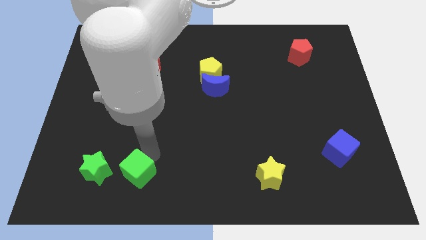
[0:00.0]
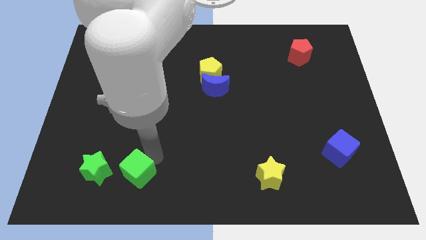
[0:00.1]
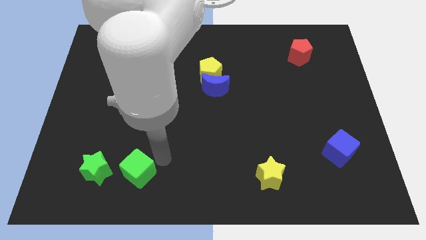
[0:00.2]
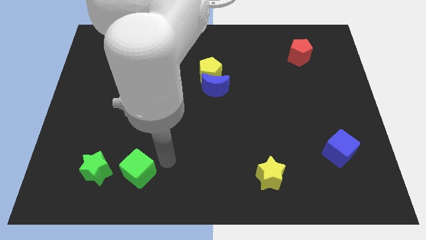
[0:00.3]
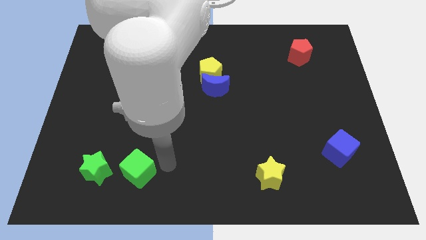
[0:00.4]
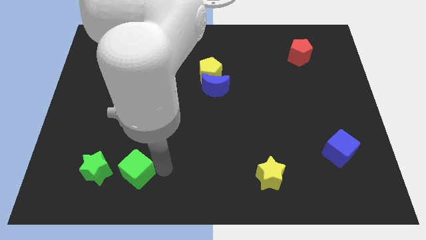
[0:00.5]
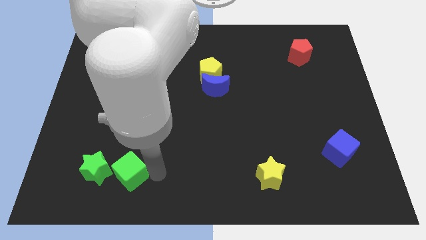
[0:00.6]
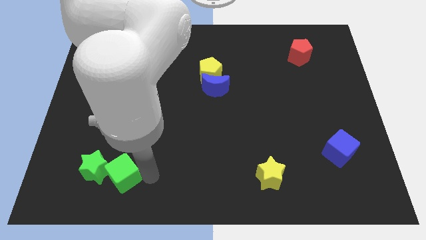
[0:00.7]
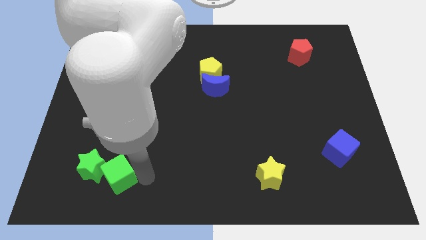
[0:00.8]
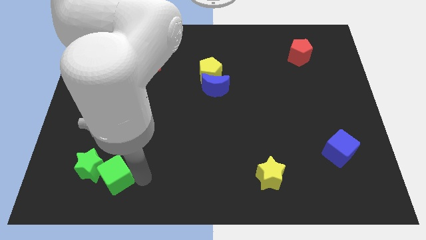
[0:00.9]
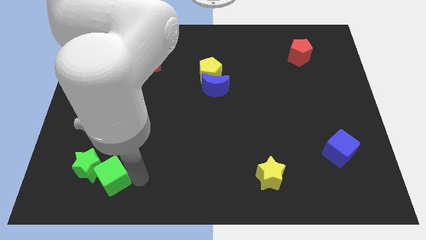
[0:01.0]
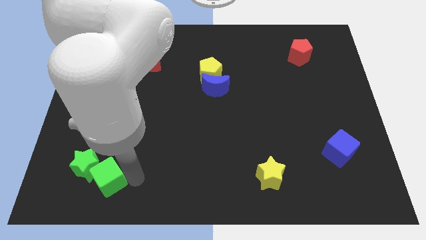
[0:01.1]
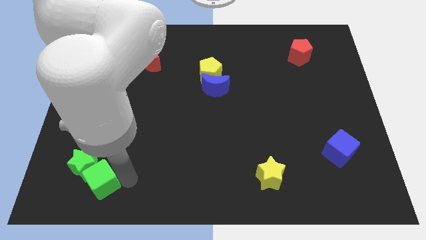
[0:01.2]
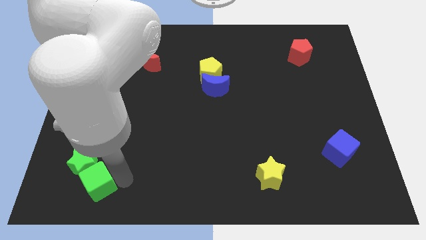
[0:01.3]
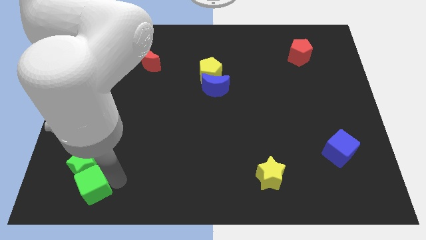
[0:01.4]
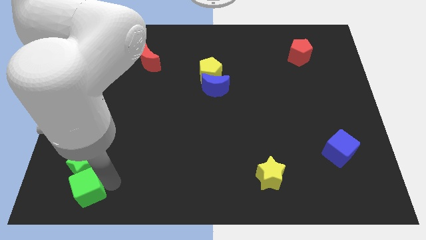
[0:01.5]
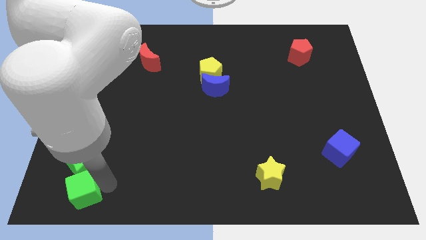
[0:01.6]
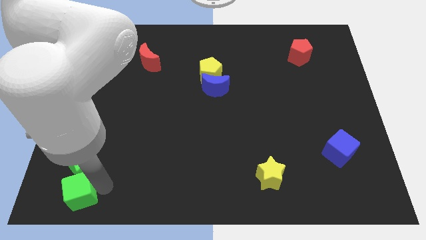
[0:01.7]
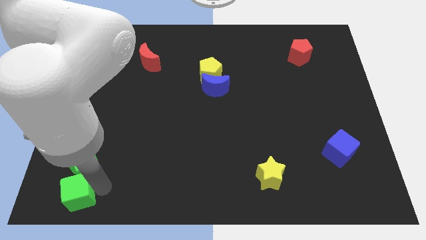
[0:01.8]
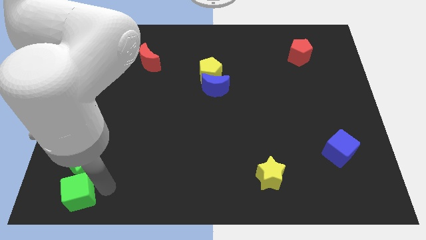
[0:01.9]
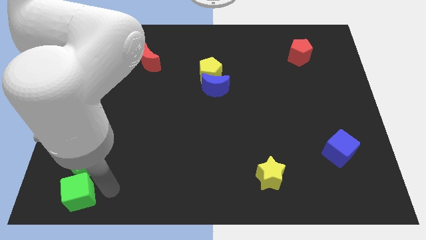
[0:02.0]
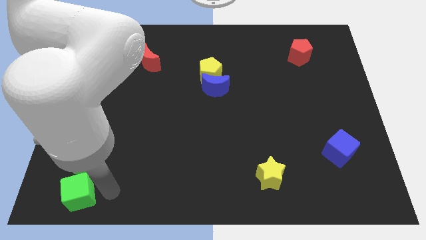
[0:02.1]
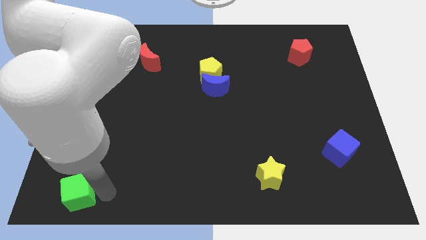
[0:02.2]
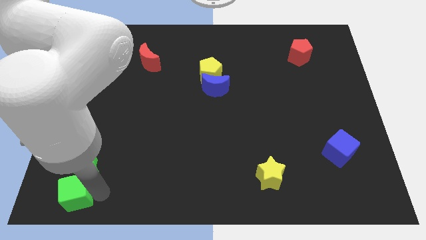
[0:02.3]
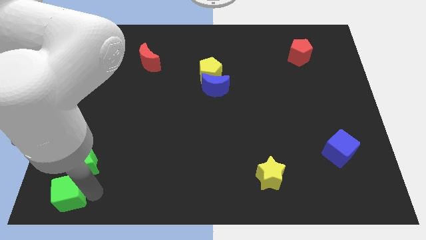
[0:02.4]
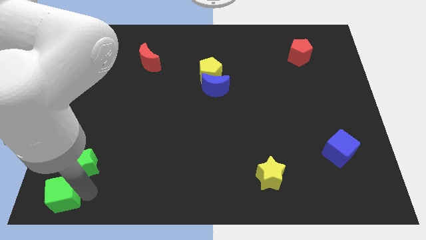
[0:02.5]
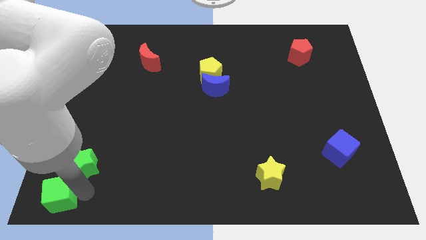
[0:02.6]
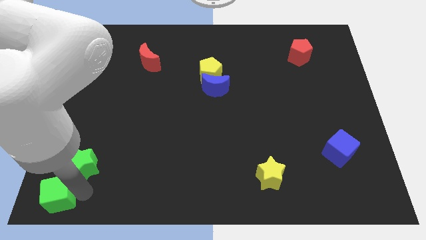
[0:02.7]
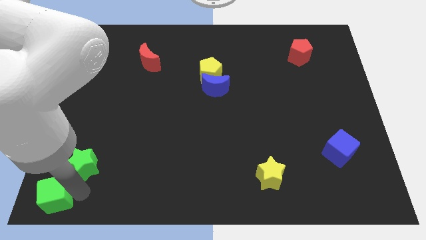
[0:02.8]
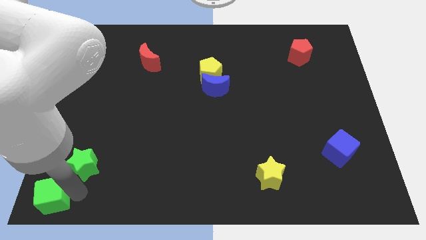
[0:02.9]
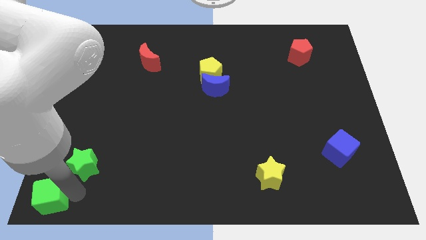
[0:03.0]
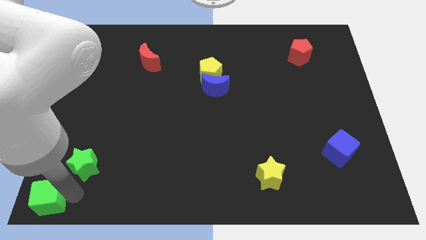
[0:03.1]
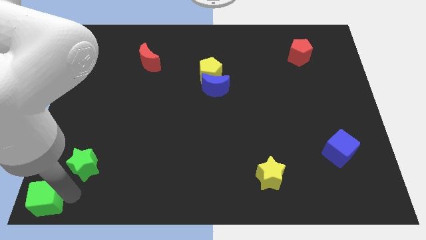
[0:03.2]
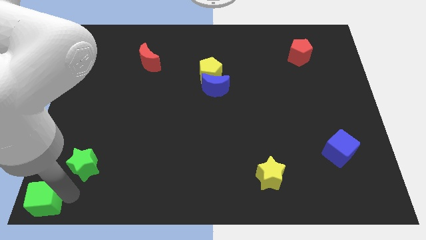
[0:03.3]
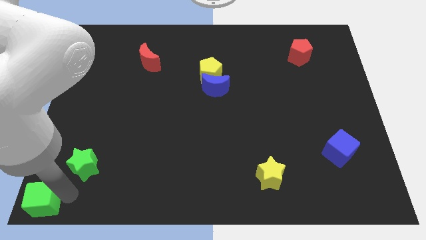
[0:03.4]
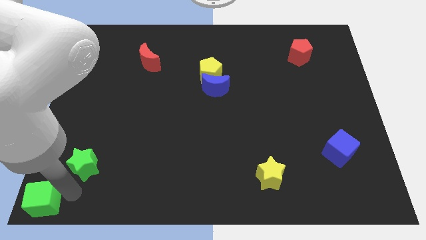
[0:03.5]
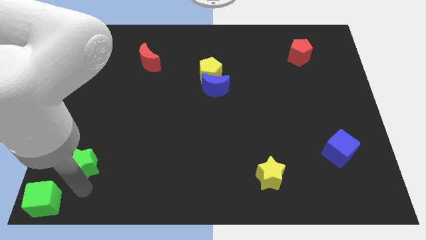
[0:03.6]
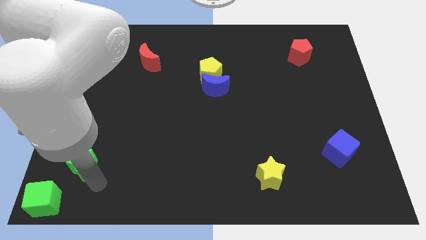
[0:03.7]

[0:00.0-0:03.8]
push the green cube to the bottom left corner

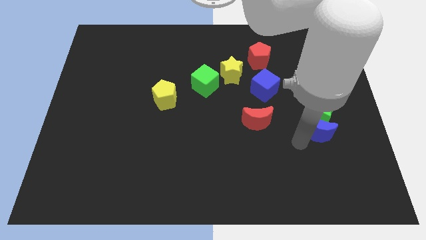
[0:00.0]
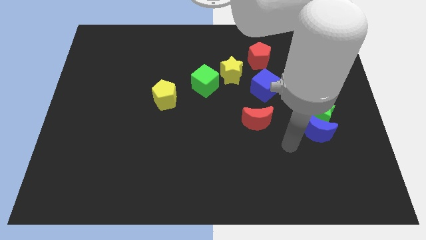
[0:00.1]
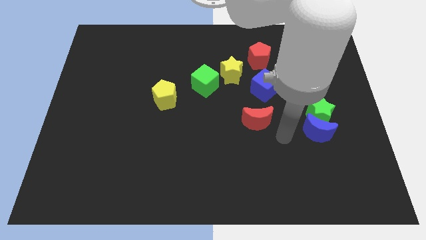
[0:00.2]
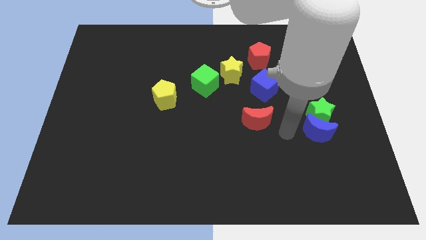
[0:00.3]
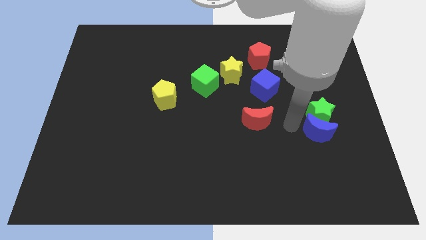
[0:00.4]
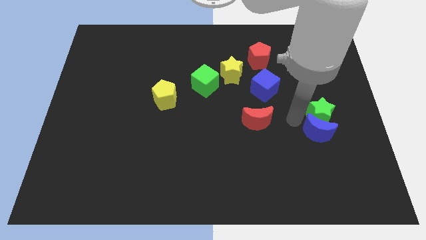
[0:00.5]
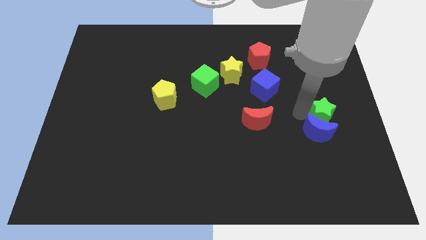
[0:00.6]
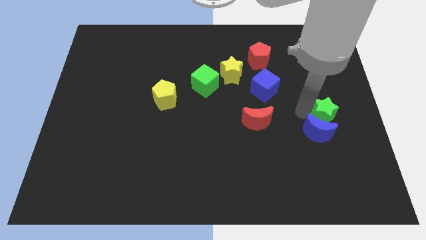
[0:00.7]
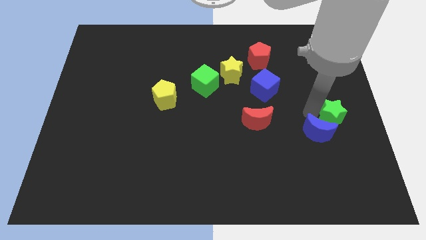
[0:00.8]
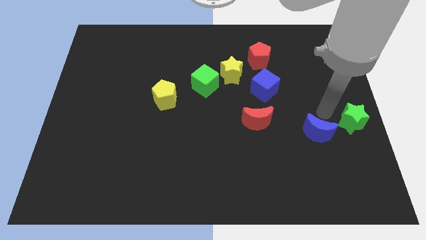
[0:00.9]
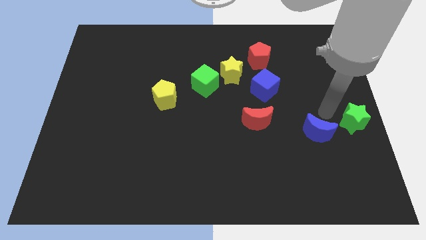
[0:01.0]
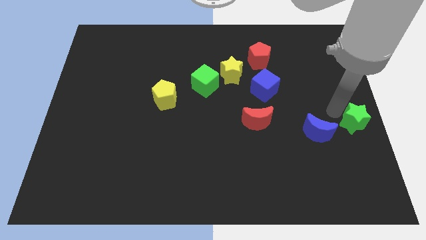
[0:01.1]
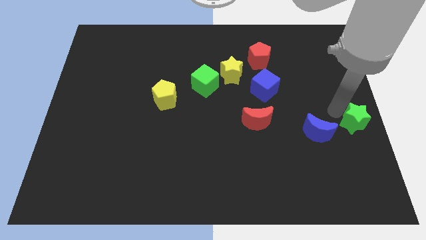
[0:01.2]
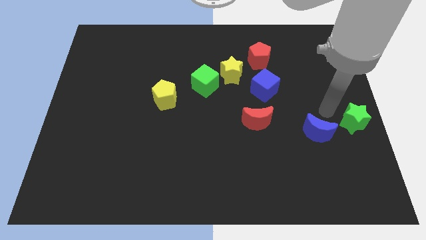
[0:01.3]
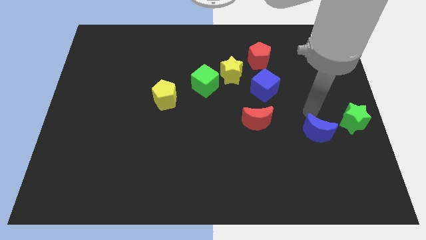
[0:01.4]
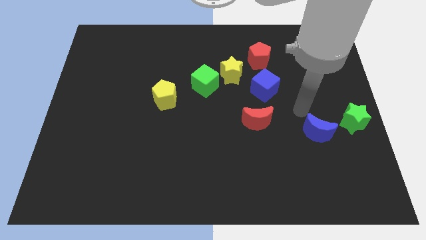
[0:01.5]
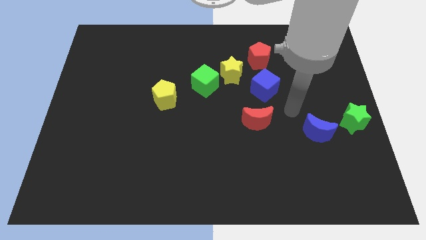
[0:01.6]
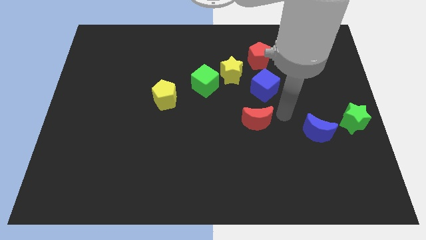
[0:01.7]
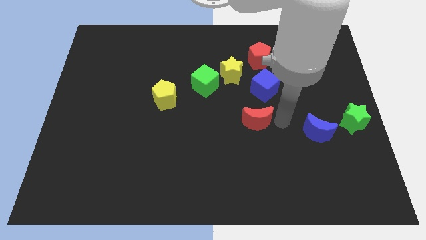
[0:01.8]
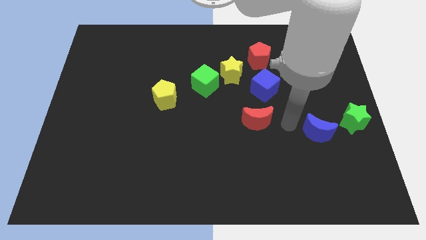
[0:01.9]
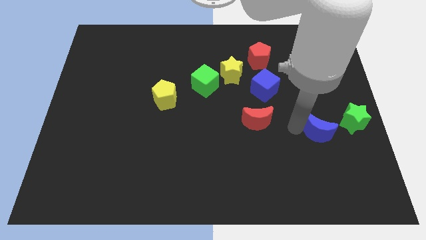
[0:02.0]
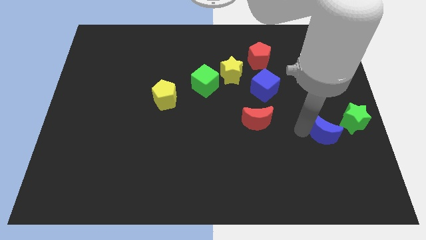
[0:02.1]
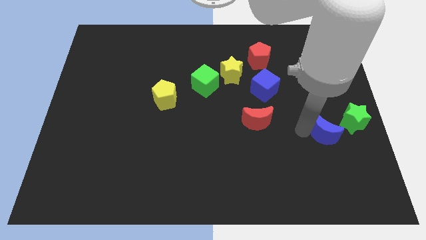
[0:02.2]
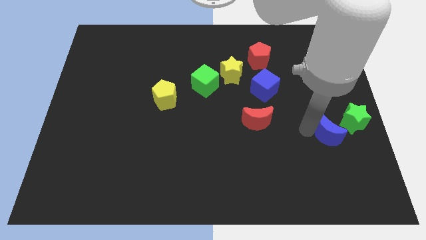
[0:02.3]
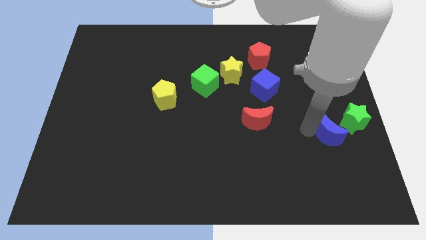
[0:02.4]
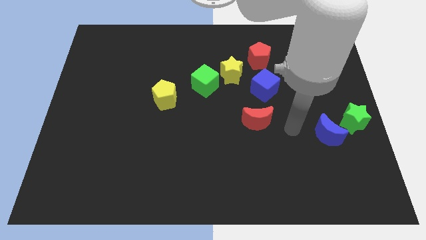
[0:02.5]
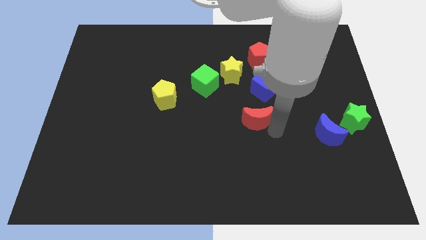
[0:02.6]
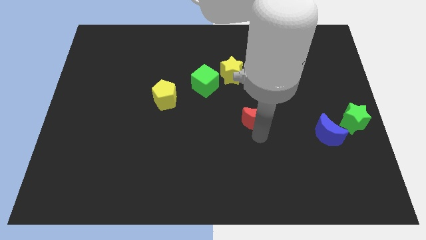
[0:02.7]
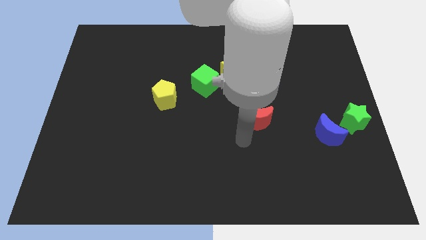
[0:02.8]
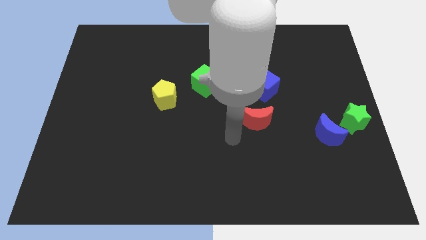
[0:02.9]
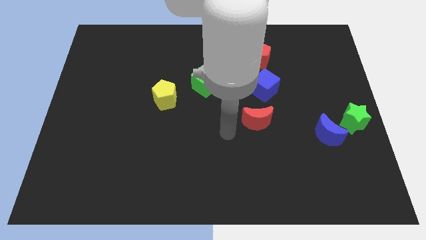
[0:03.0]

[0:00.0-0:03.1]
place blue crescent to the left of the green star

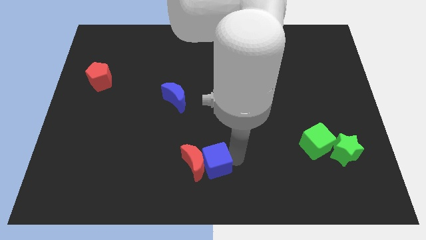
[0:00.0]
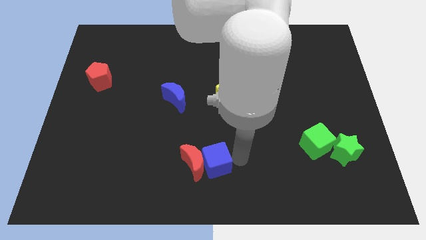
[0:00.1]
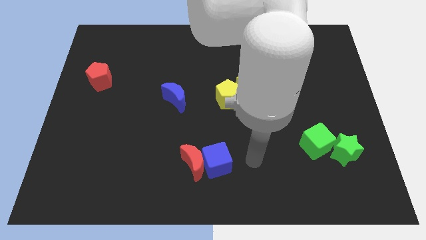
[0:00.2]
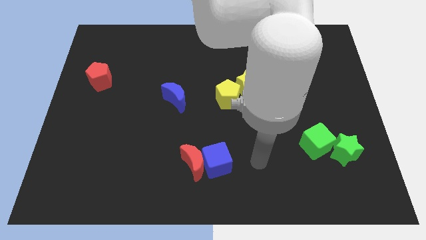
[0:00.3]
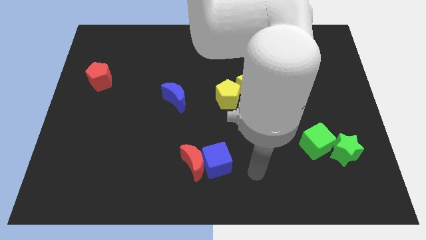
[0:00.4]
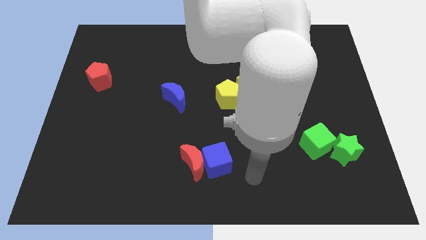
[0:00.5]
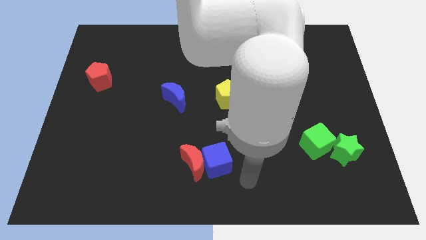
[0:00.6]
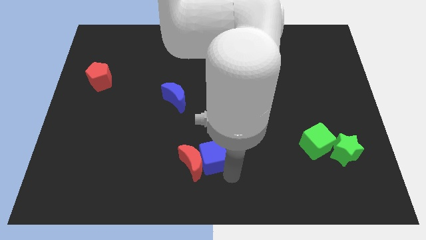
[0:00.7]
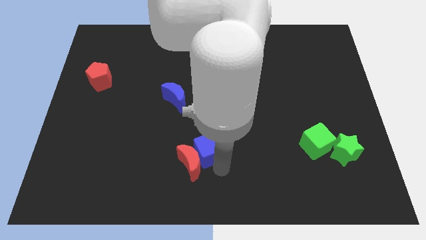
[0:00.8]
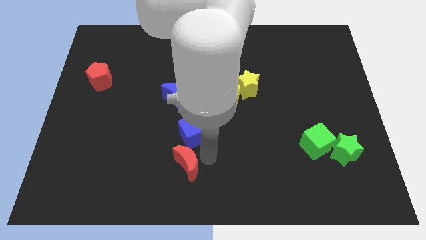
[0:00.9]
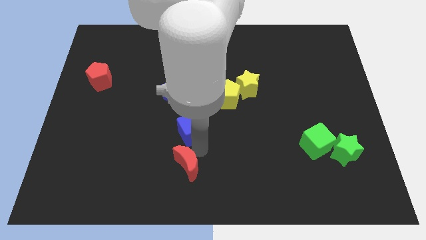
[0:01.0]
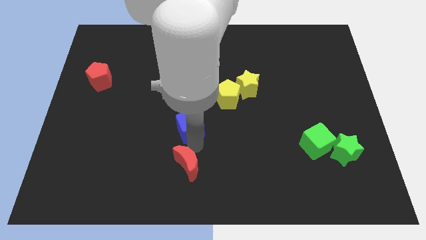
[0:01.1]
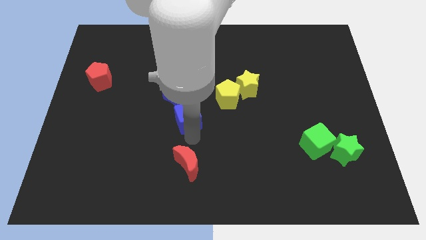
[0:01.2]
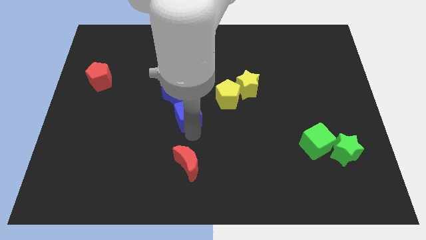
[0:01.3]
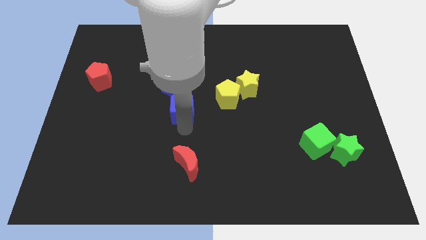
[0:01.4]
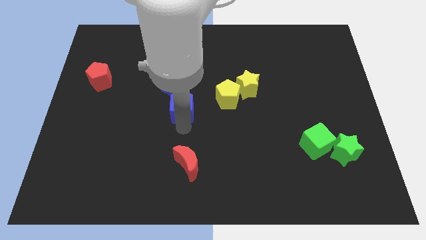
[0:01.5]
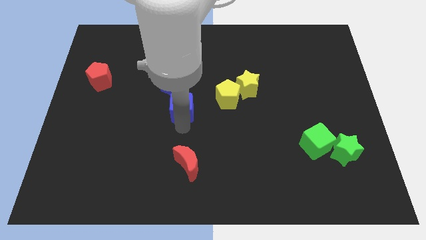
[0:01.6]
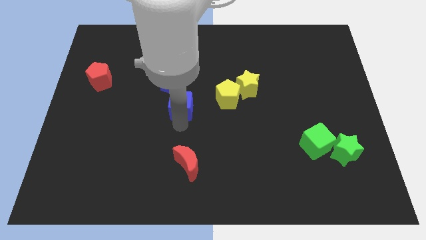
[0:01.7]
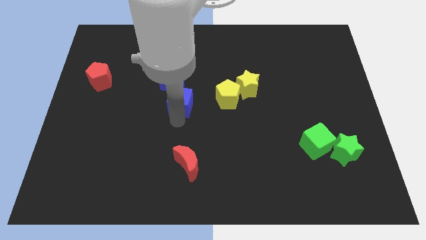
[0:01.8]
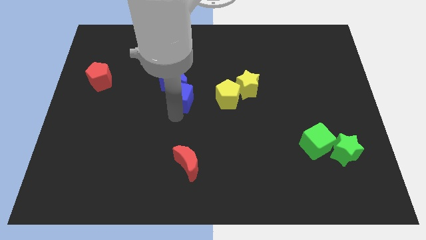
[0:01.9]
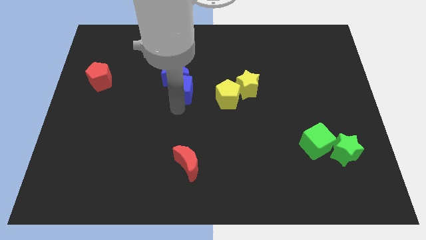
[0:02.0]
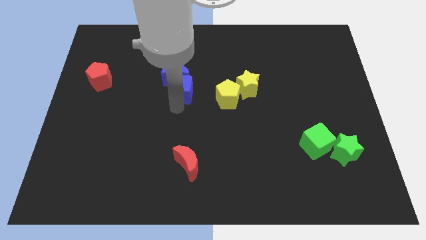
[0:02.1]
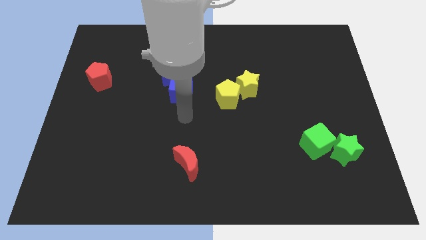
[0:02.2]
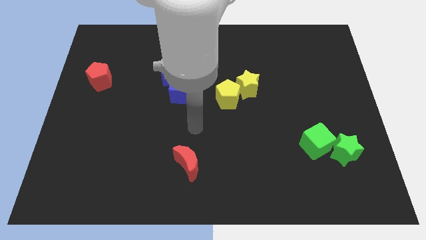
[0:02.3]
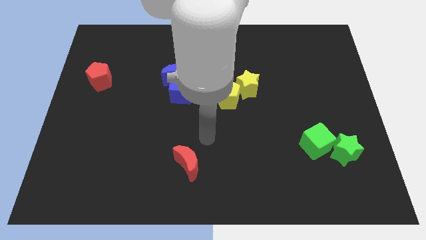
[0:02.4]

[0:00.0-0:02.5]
push the blue cube into blue crescent
